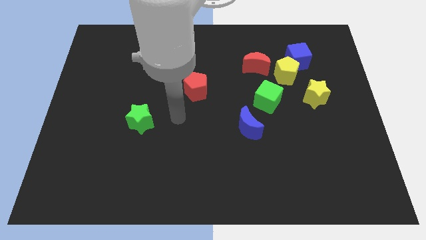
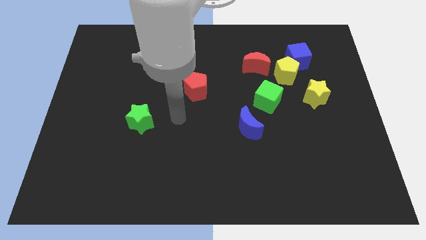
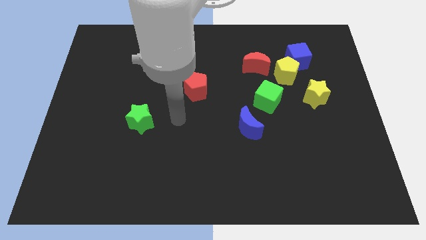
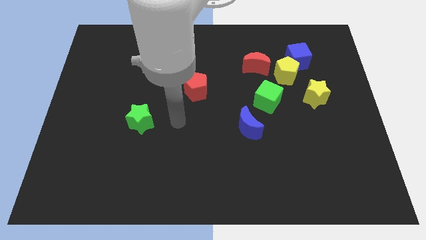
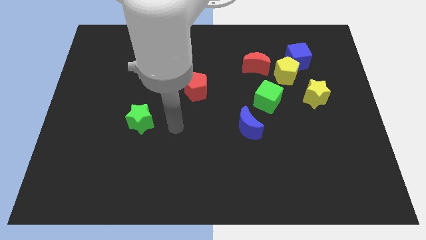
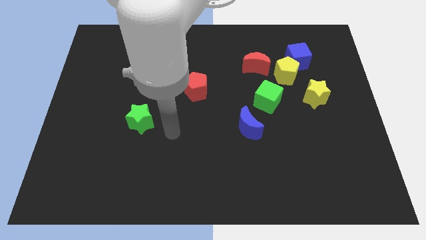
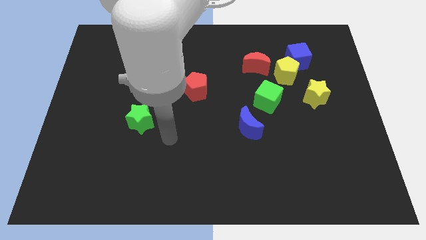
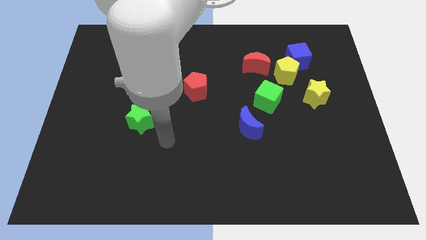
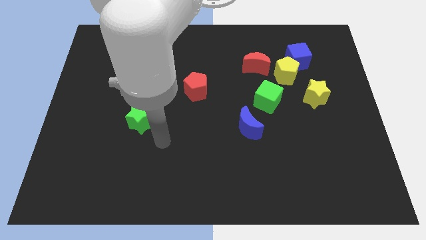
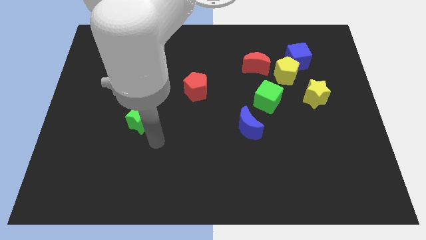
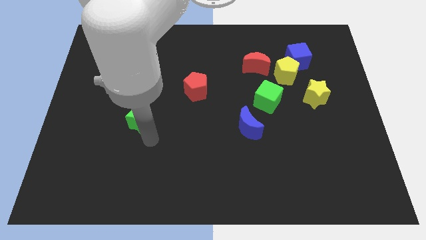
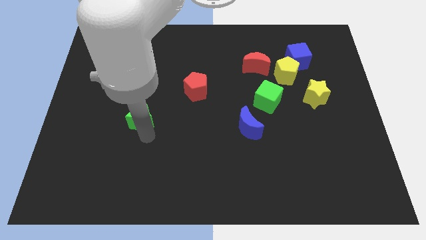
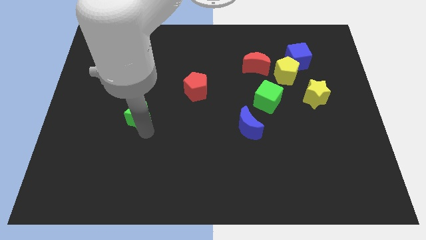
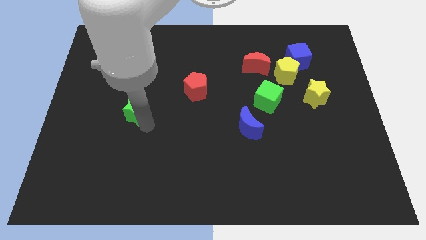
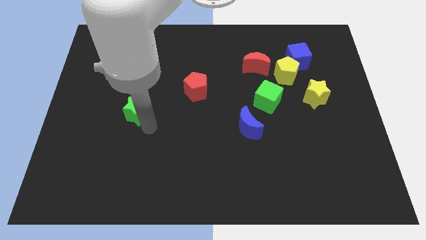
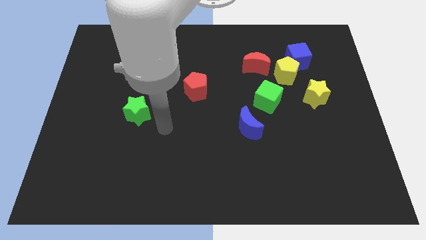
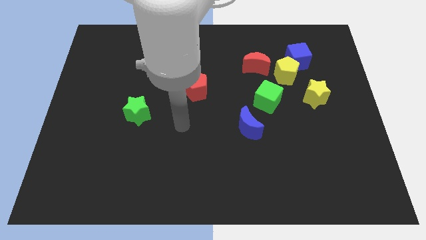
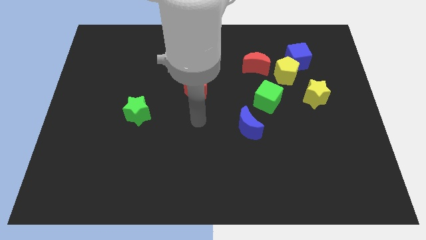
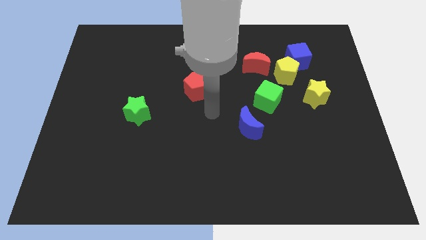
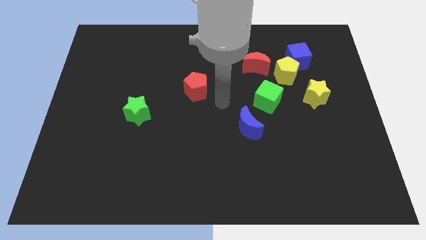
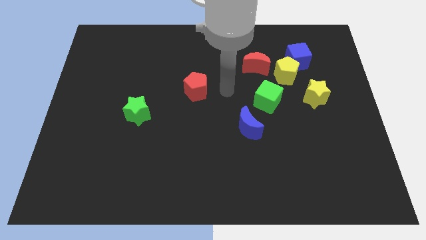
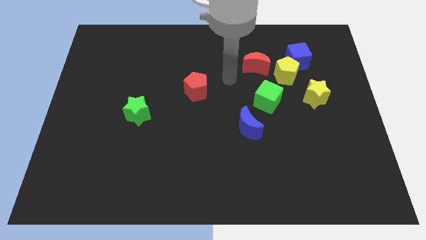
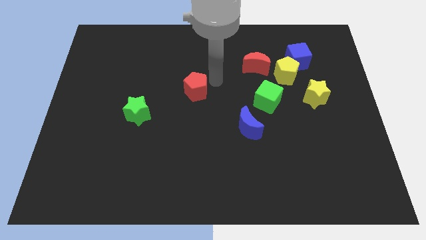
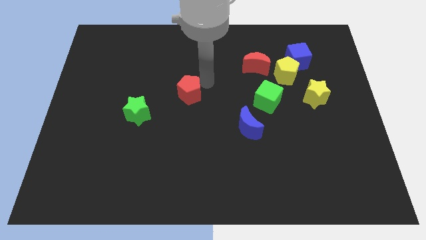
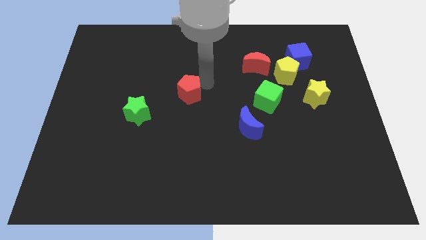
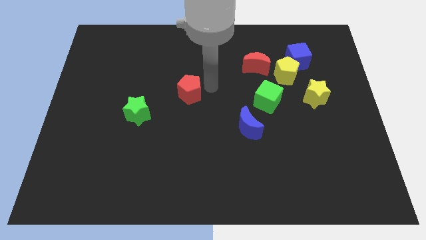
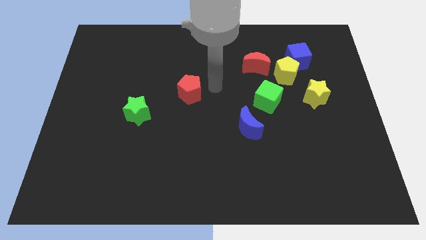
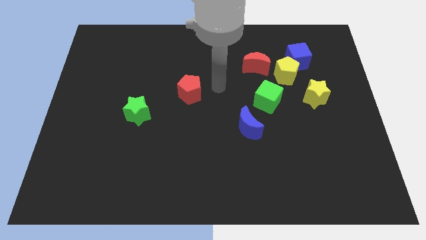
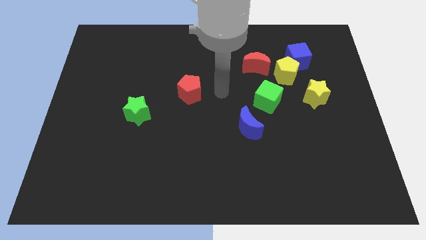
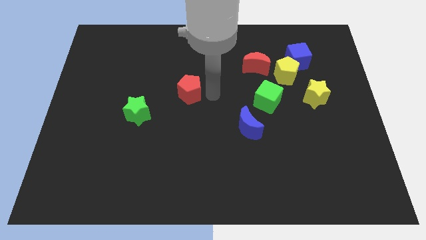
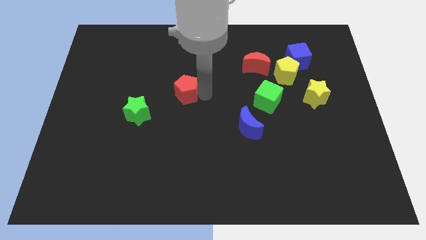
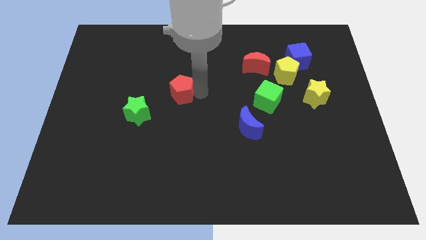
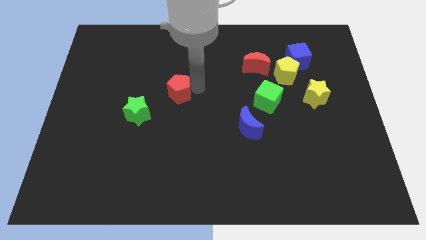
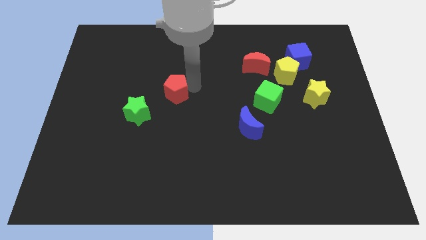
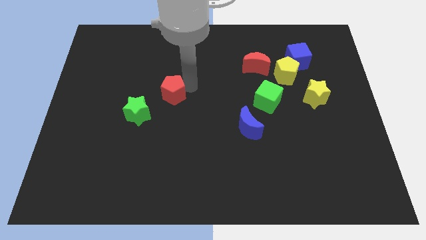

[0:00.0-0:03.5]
move the green star and red pentagon diagonal to each otther

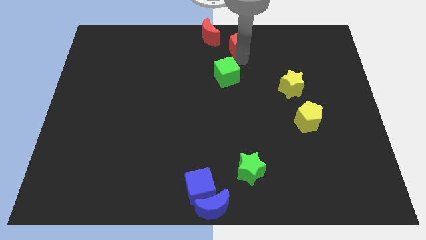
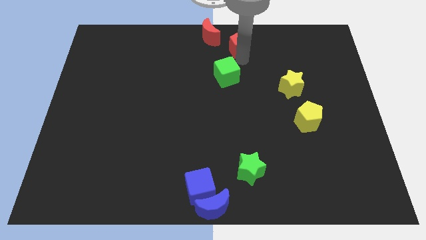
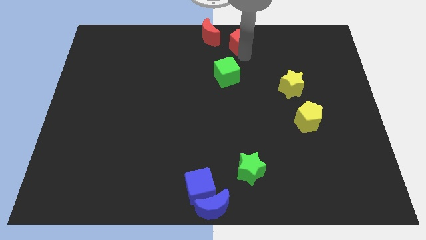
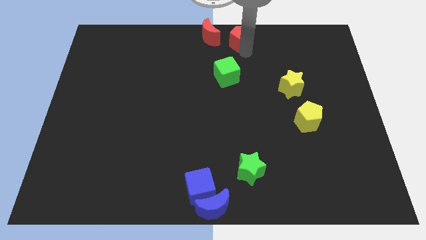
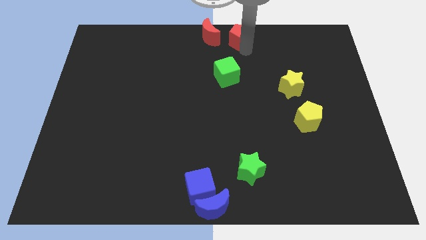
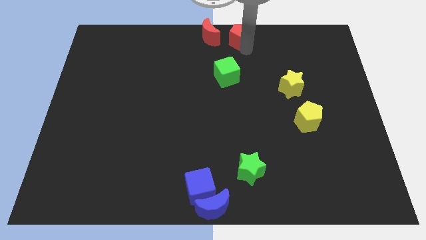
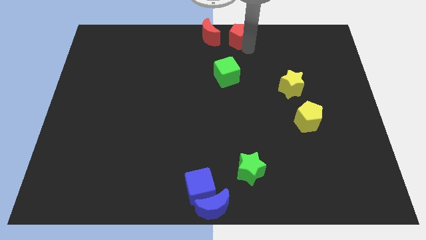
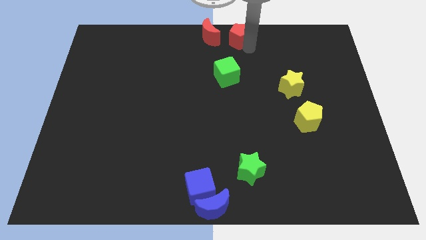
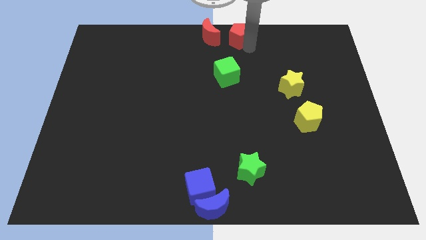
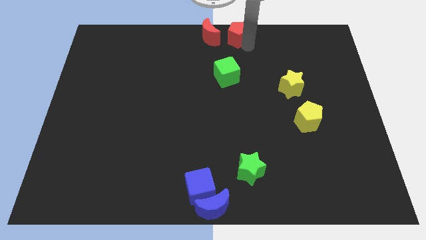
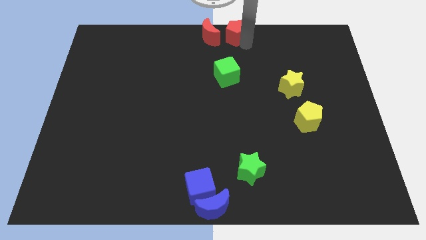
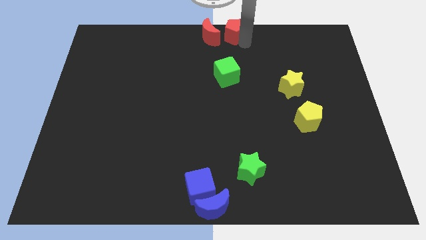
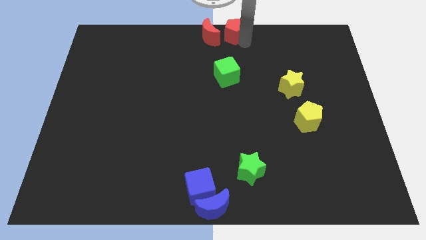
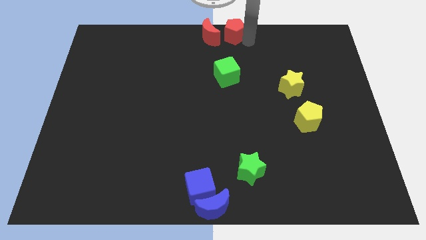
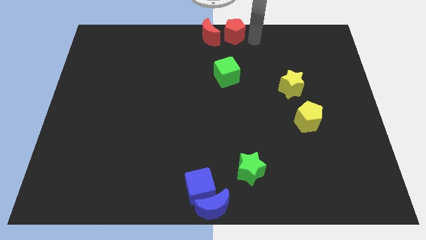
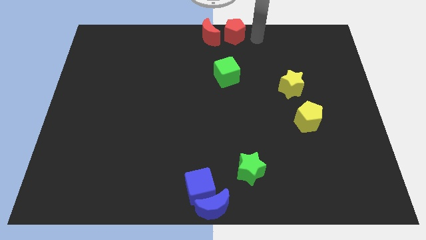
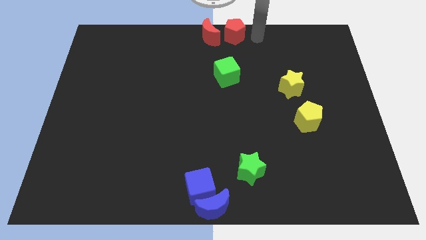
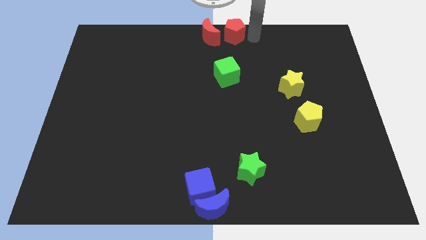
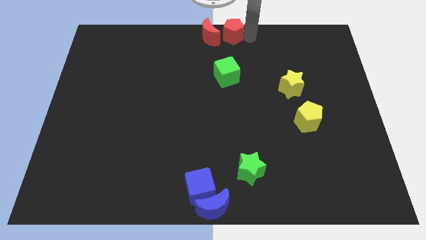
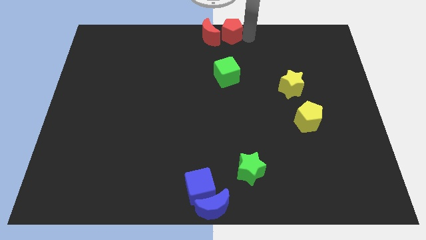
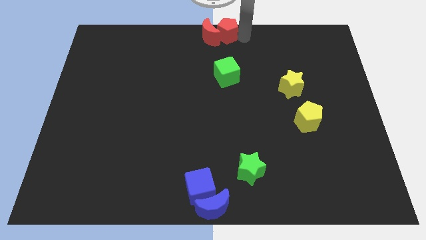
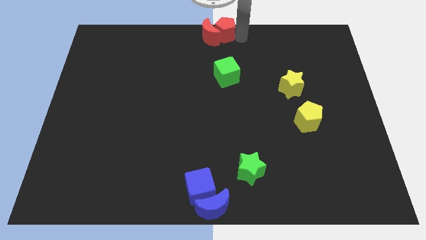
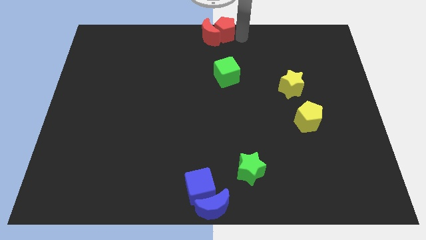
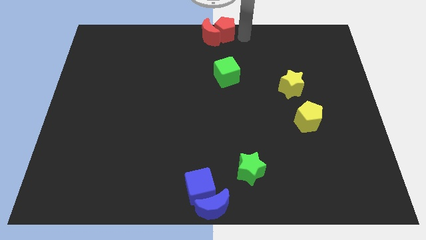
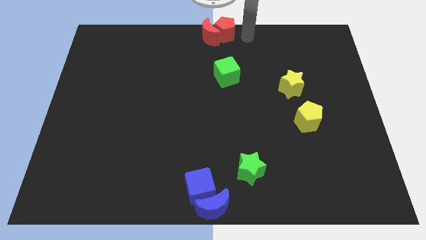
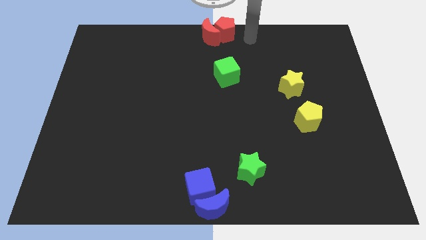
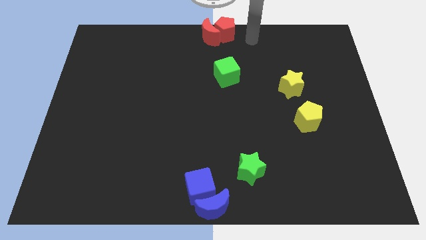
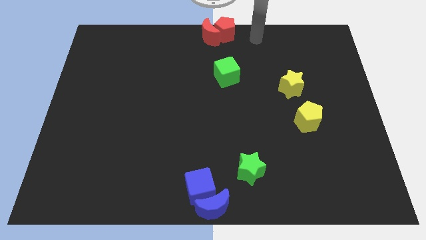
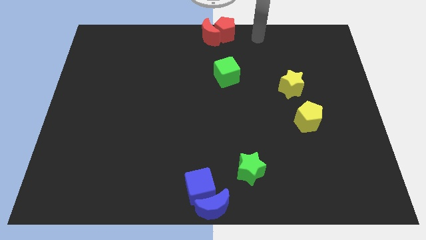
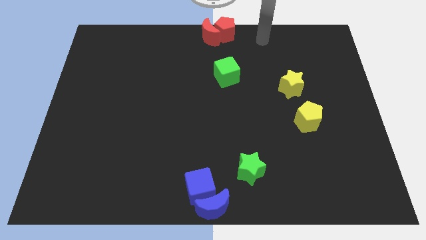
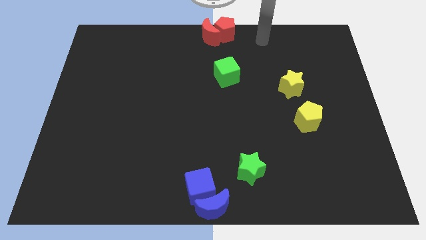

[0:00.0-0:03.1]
move the red pentagon close to the right side of the red crescent

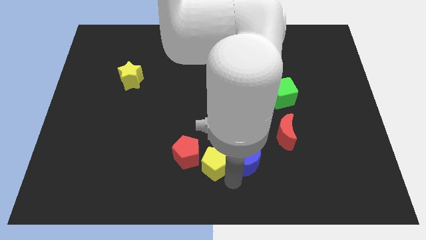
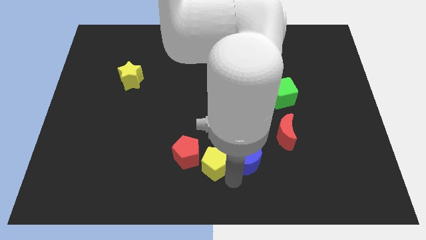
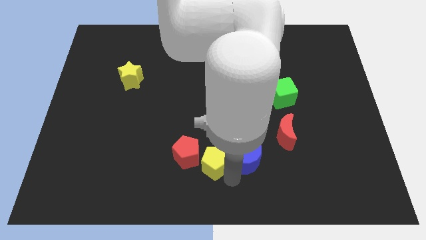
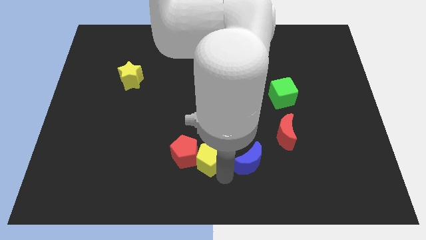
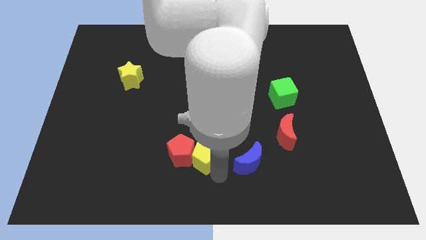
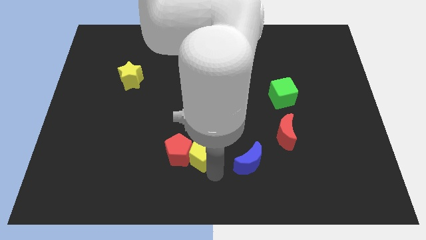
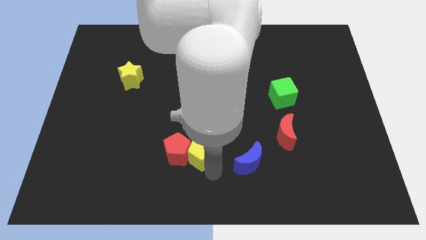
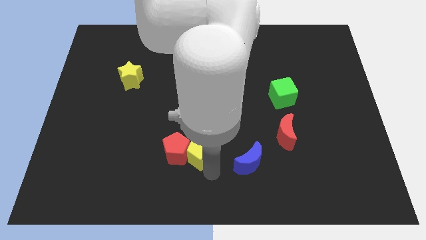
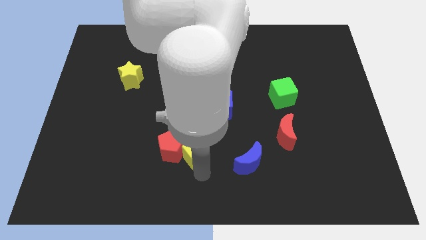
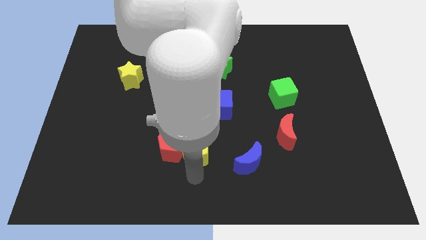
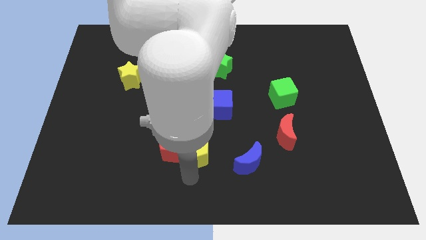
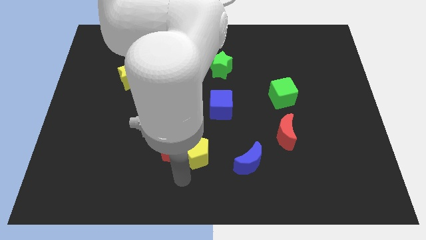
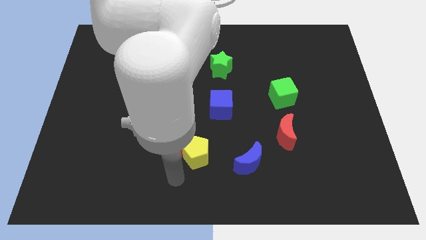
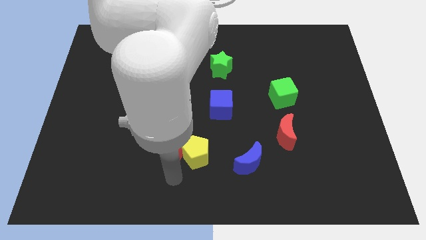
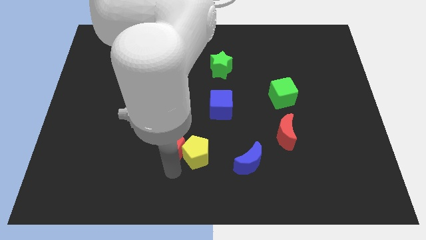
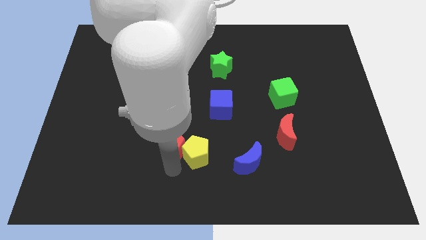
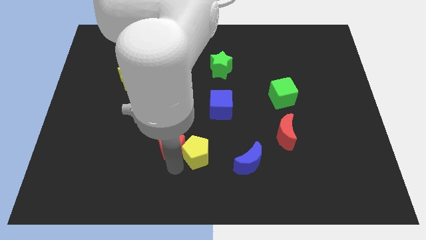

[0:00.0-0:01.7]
push the yellow and red pentagon towards left

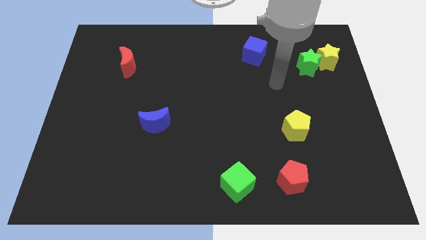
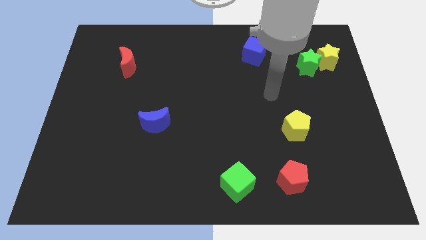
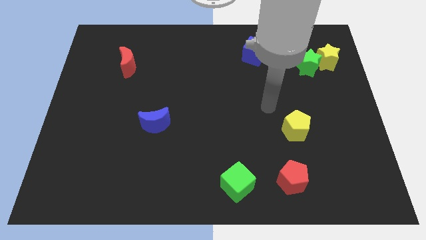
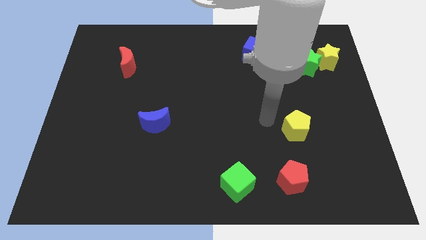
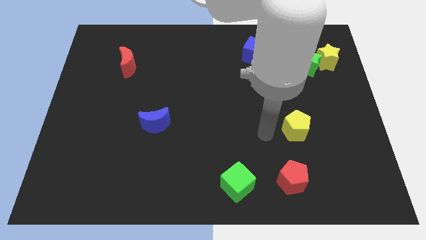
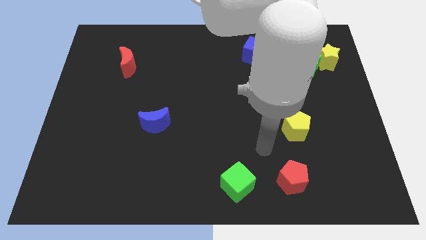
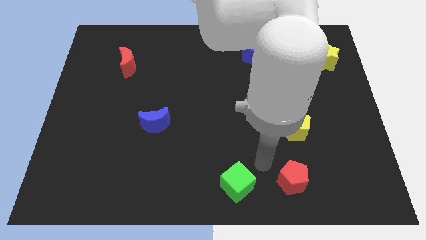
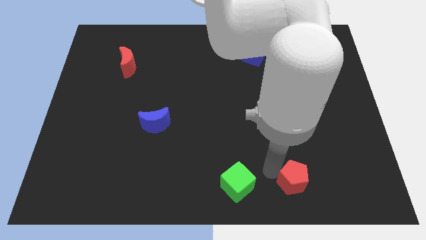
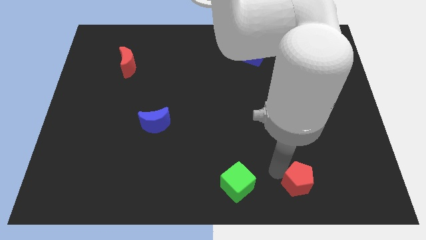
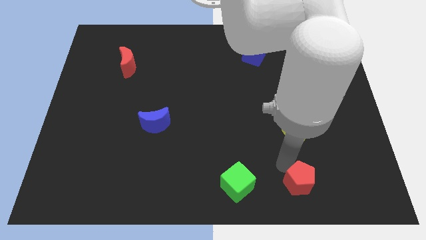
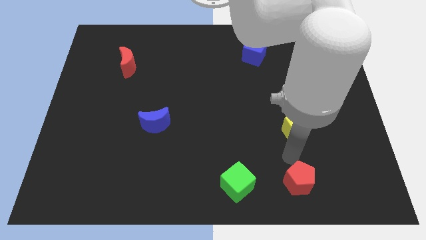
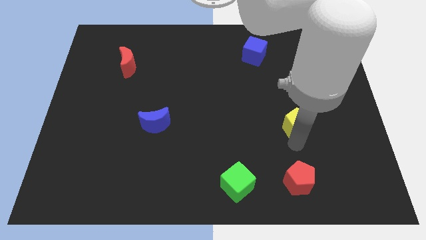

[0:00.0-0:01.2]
touch the red pentagon
